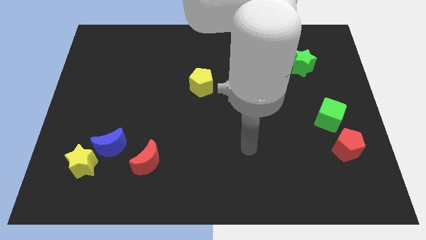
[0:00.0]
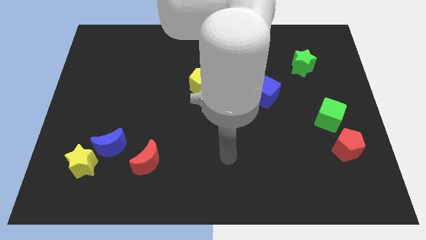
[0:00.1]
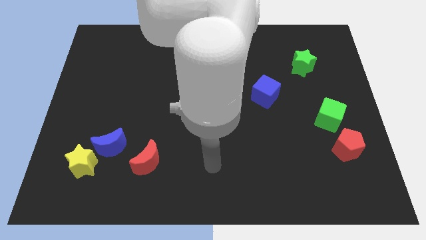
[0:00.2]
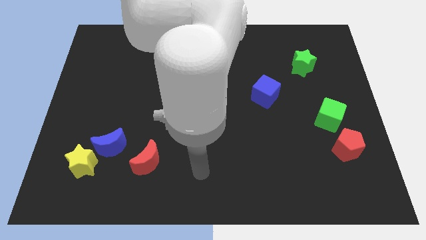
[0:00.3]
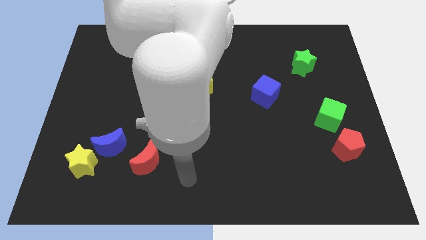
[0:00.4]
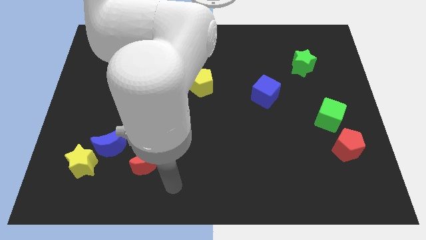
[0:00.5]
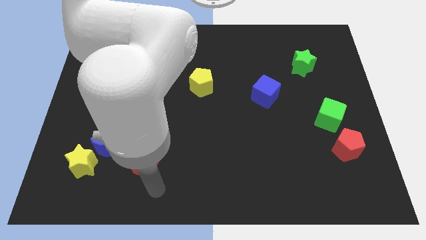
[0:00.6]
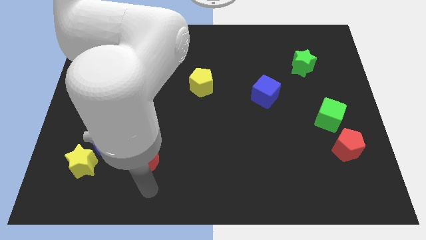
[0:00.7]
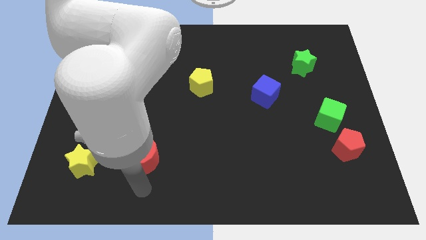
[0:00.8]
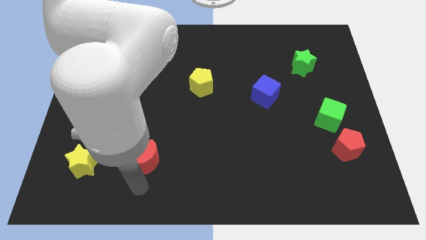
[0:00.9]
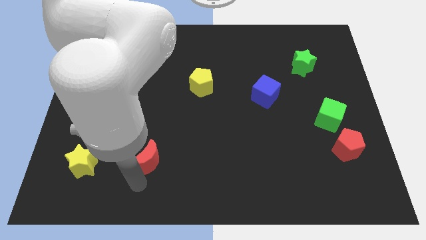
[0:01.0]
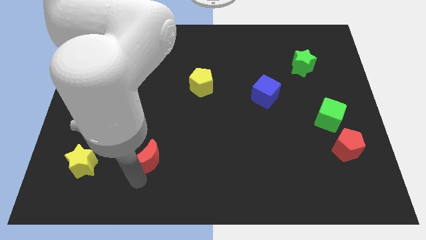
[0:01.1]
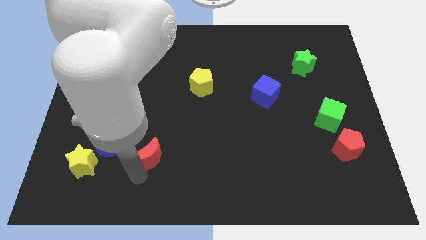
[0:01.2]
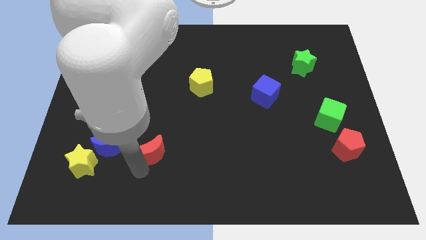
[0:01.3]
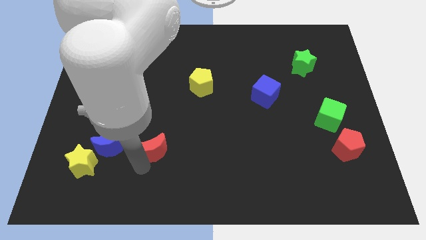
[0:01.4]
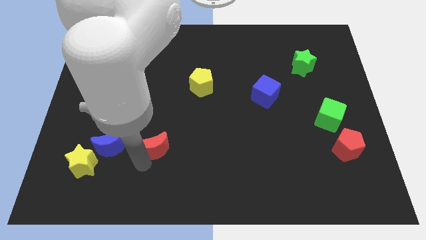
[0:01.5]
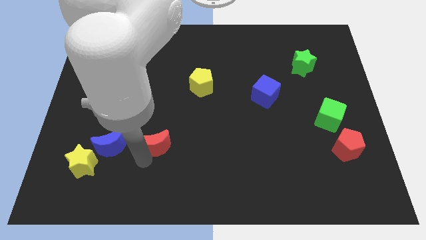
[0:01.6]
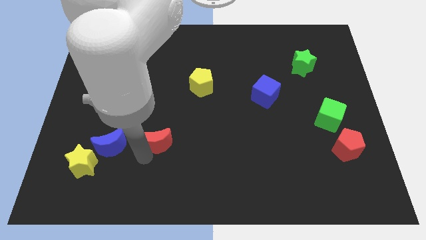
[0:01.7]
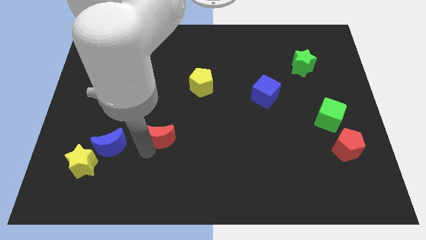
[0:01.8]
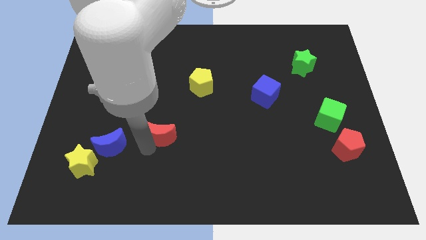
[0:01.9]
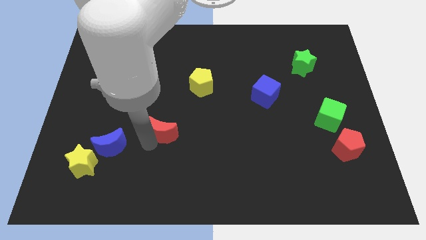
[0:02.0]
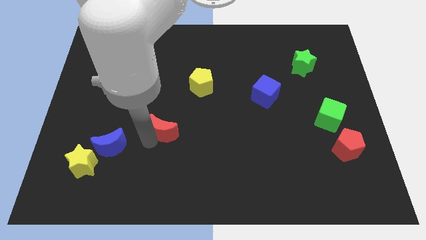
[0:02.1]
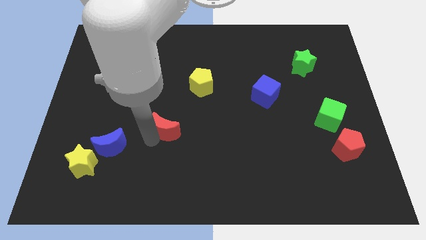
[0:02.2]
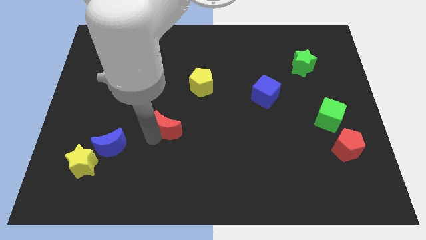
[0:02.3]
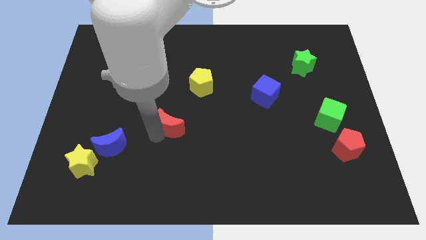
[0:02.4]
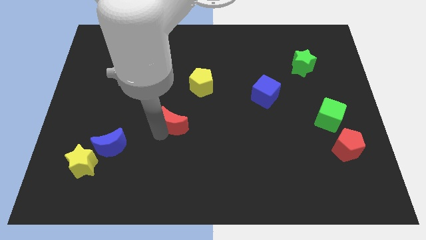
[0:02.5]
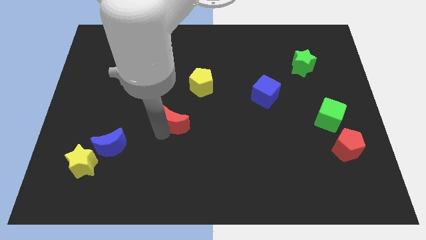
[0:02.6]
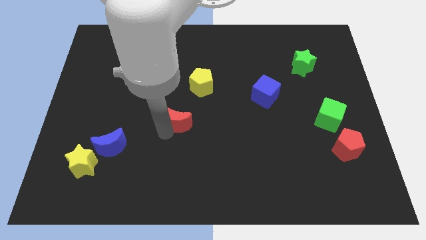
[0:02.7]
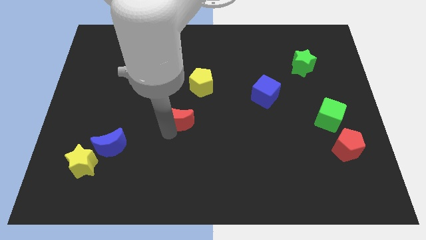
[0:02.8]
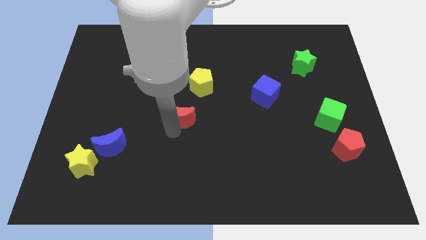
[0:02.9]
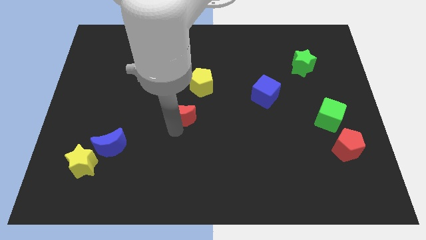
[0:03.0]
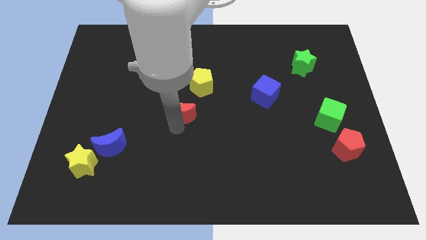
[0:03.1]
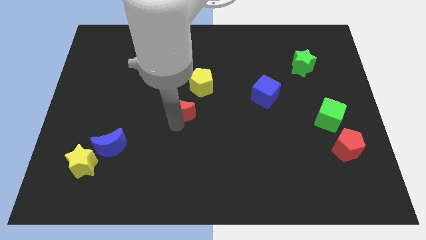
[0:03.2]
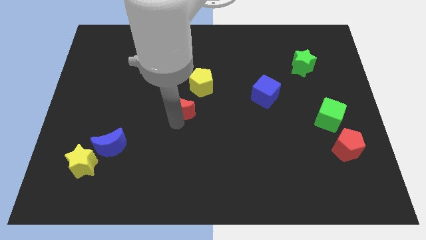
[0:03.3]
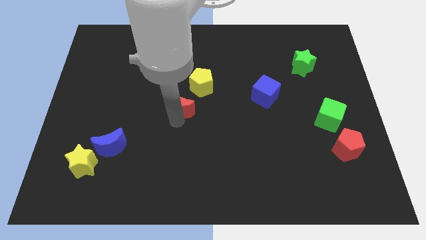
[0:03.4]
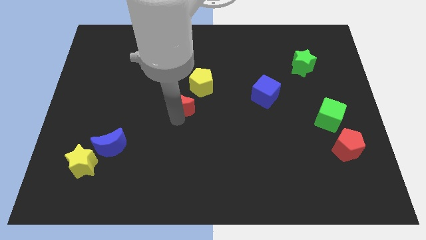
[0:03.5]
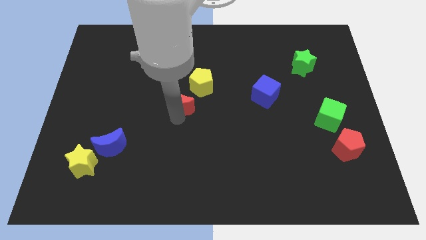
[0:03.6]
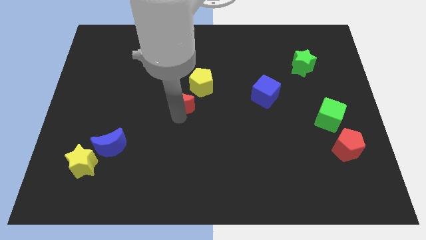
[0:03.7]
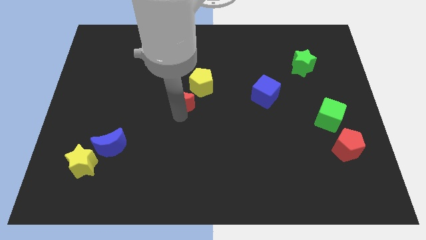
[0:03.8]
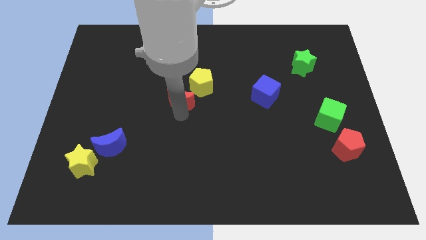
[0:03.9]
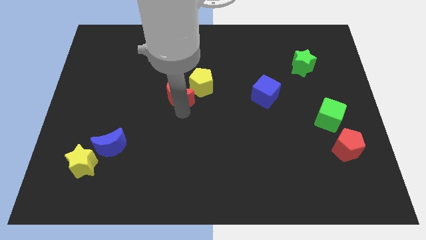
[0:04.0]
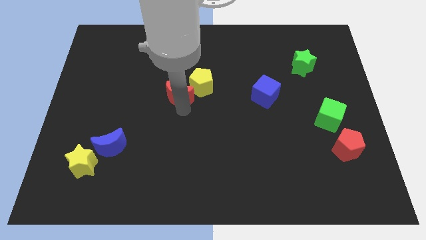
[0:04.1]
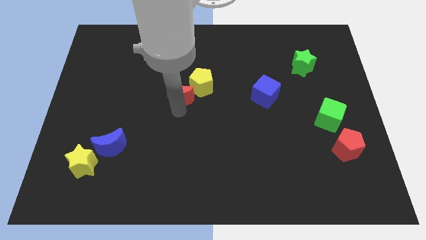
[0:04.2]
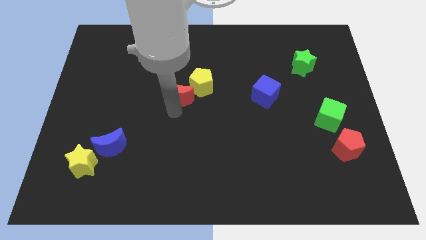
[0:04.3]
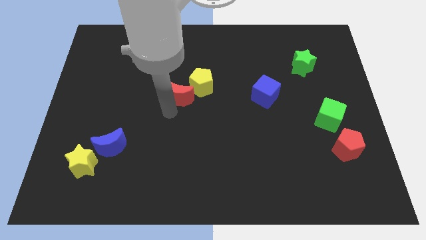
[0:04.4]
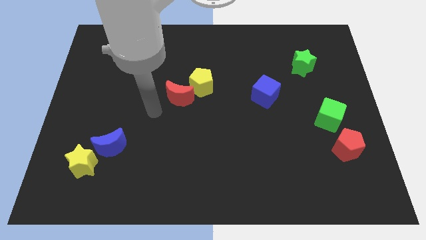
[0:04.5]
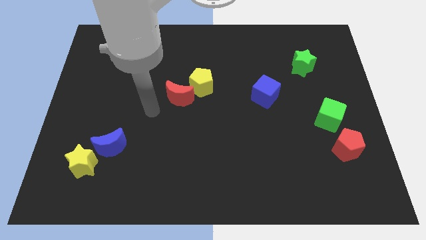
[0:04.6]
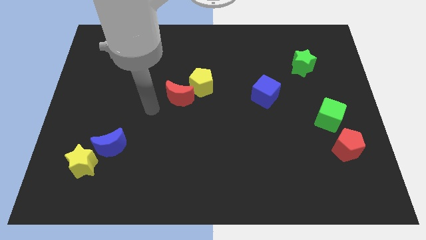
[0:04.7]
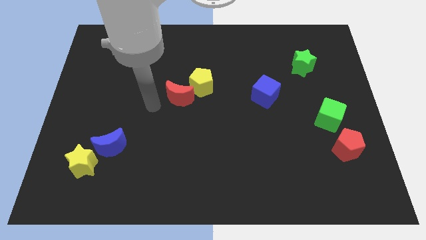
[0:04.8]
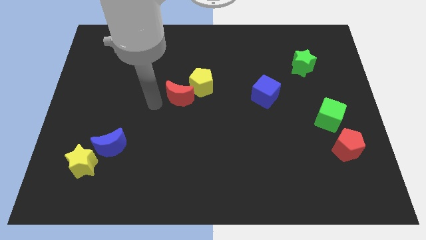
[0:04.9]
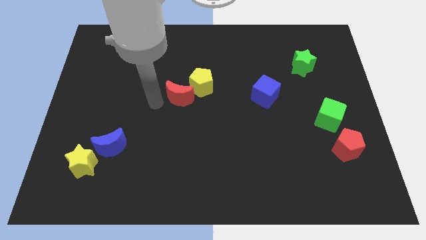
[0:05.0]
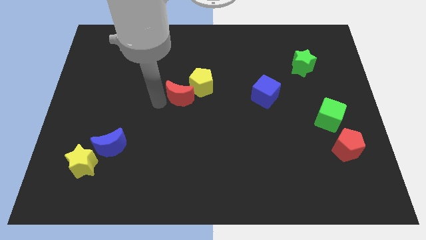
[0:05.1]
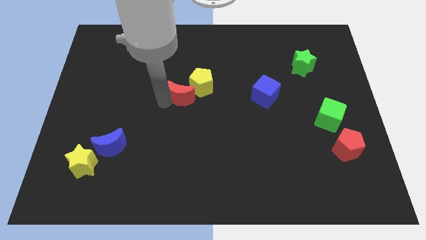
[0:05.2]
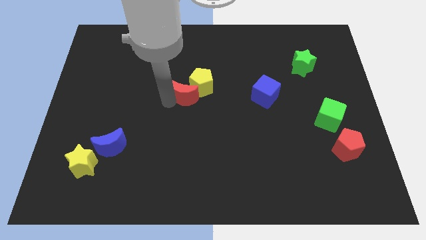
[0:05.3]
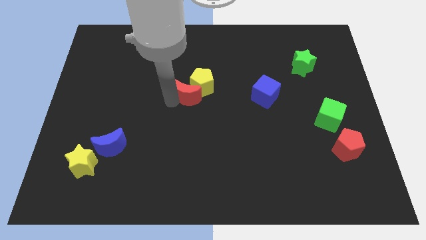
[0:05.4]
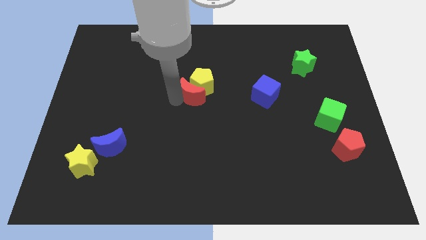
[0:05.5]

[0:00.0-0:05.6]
put the red moon towards the yellow pentagon

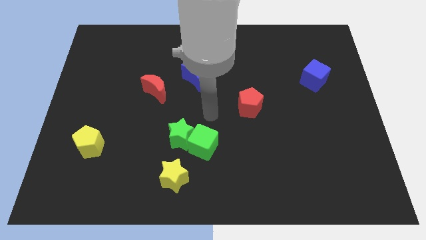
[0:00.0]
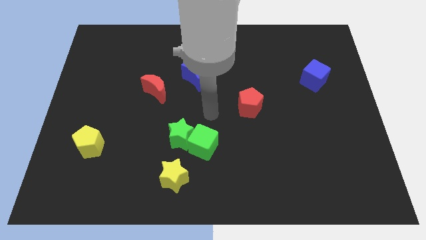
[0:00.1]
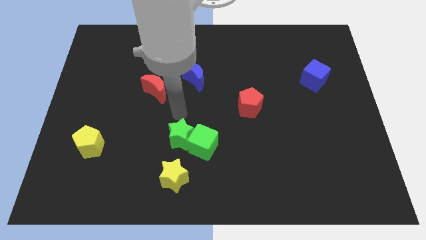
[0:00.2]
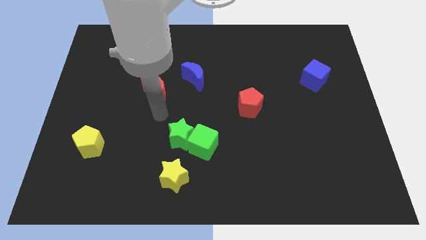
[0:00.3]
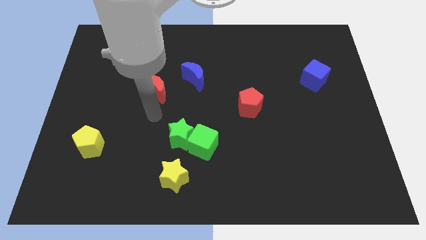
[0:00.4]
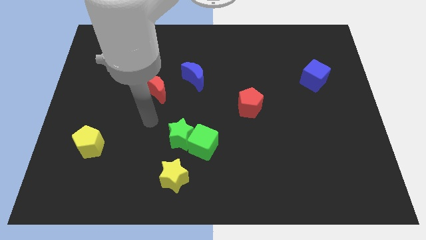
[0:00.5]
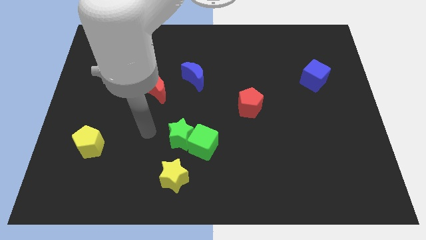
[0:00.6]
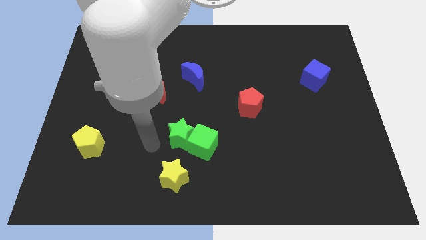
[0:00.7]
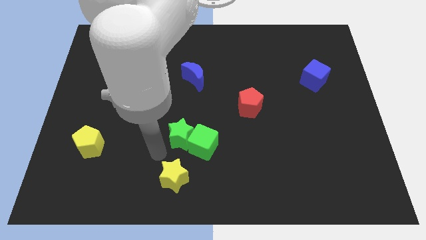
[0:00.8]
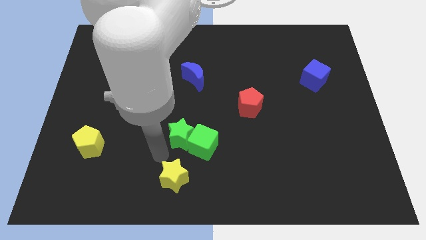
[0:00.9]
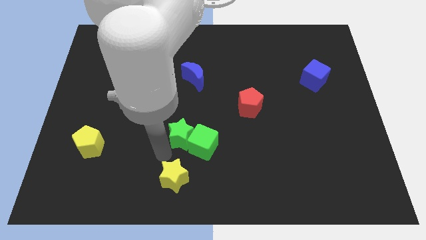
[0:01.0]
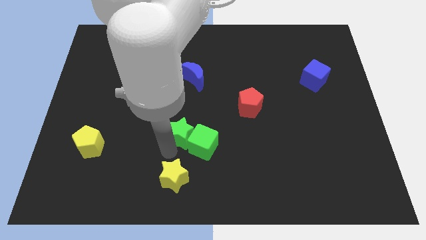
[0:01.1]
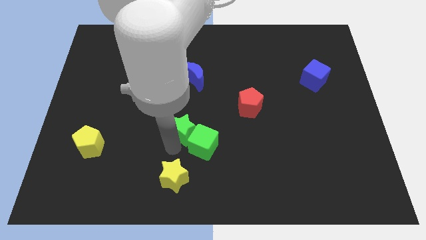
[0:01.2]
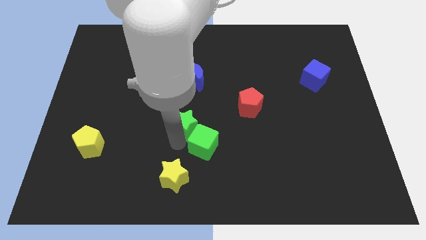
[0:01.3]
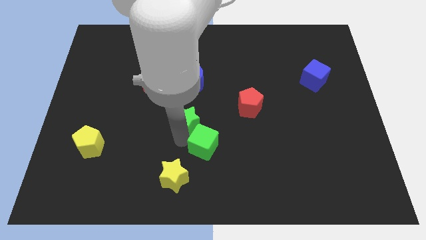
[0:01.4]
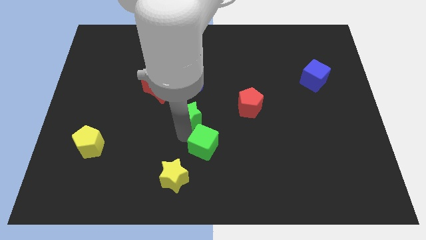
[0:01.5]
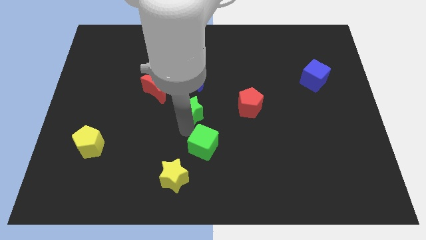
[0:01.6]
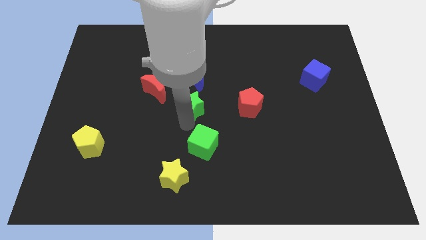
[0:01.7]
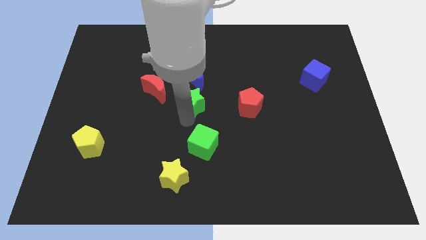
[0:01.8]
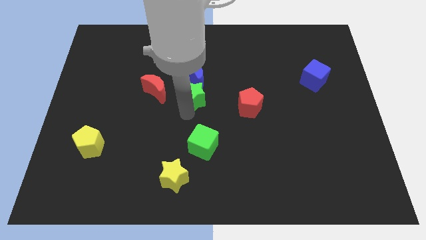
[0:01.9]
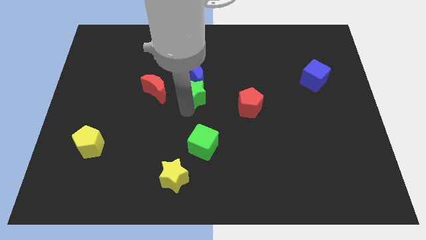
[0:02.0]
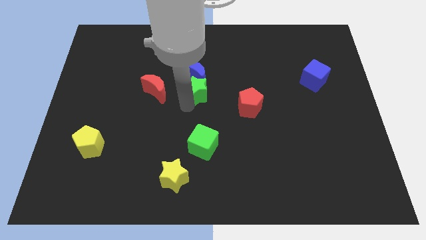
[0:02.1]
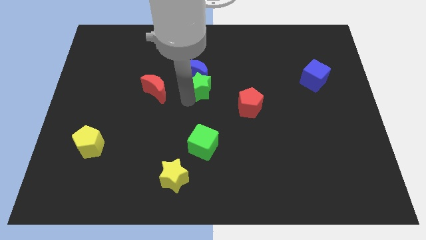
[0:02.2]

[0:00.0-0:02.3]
move the green star to the blue moon

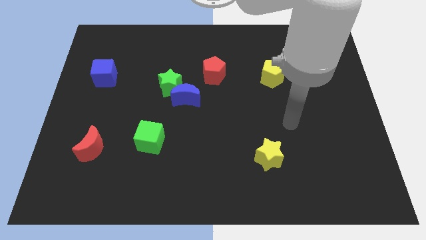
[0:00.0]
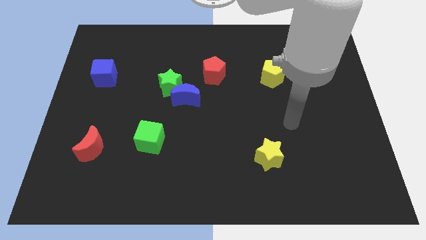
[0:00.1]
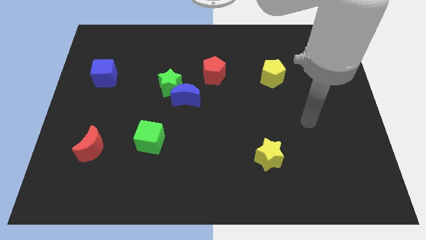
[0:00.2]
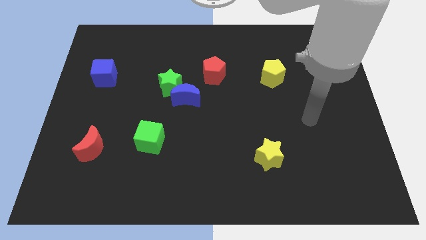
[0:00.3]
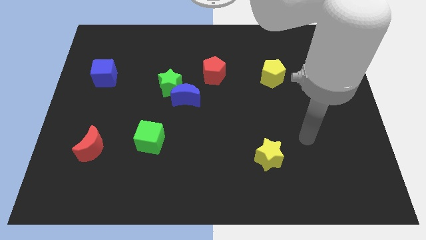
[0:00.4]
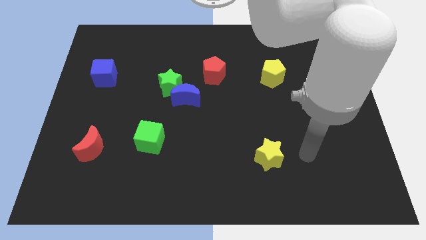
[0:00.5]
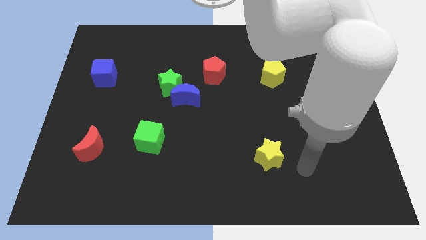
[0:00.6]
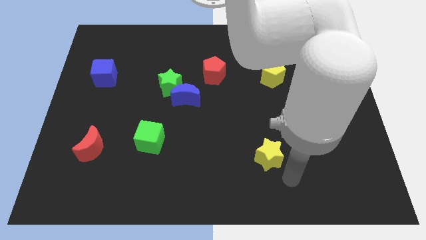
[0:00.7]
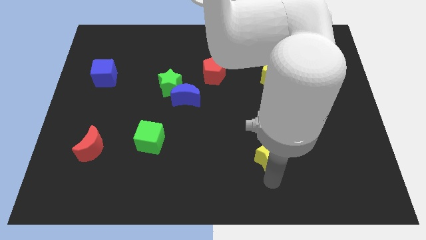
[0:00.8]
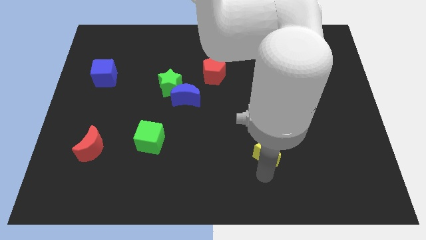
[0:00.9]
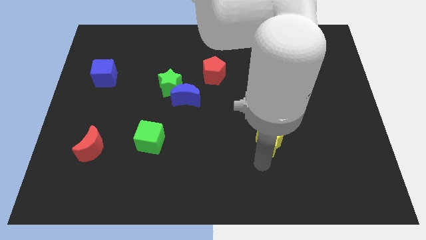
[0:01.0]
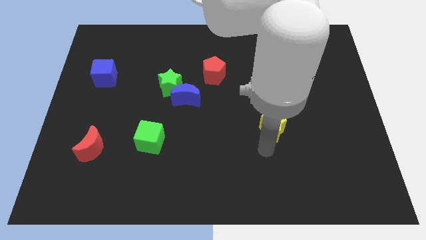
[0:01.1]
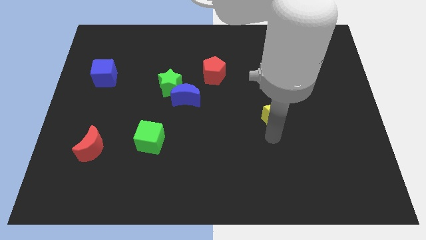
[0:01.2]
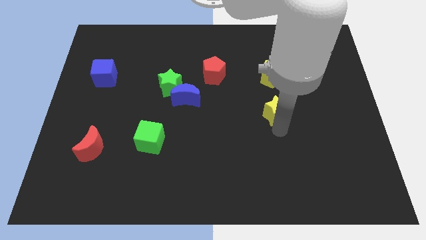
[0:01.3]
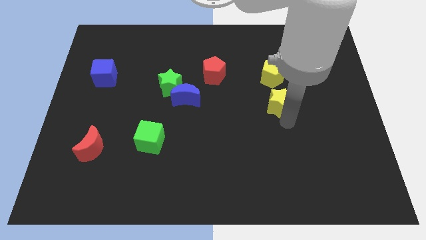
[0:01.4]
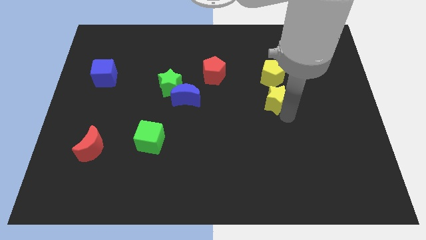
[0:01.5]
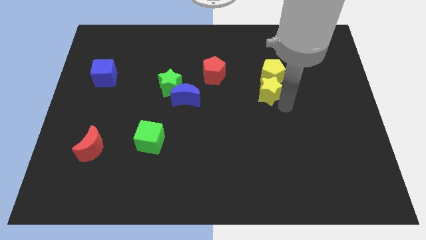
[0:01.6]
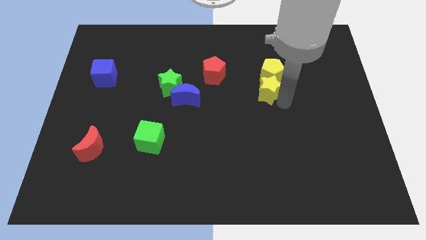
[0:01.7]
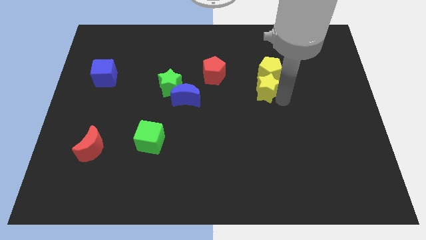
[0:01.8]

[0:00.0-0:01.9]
put the yellow star to the yellow pentagon
